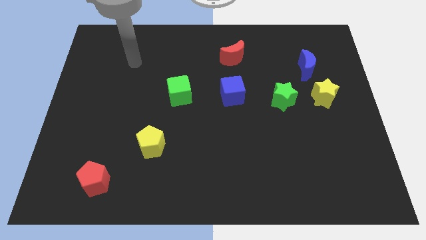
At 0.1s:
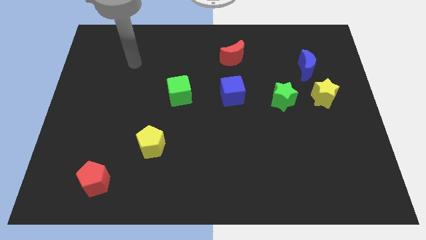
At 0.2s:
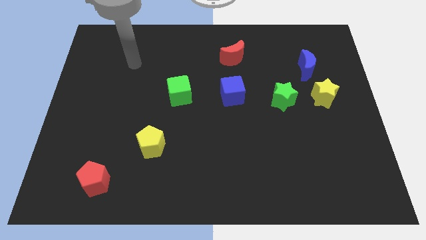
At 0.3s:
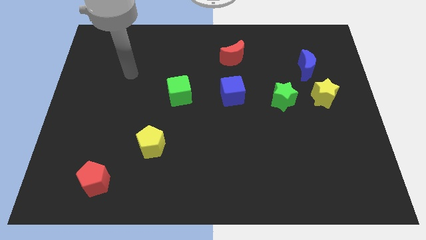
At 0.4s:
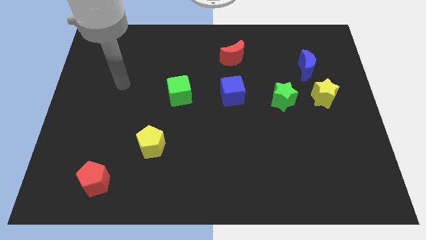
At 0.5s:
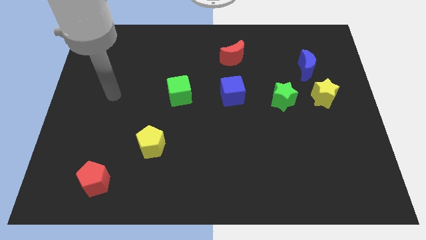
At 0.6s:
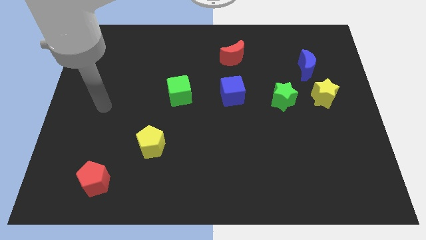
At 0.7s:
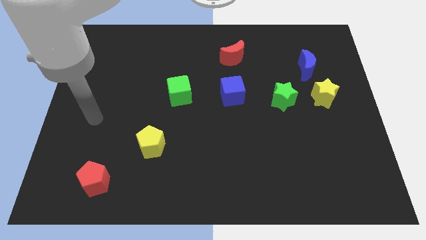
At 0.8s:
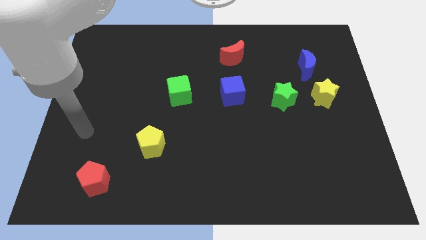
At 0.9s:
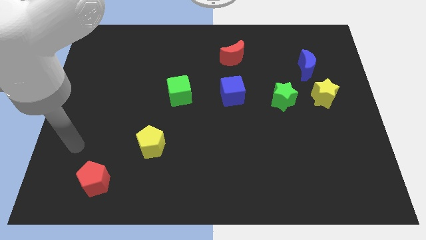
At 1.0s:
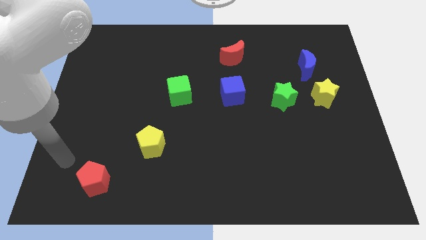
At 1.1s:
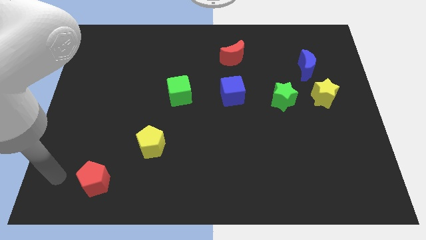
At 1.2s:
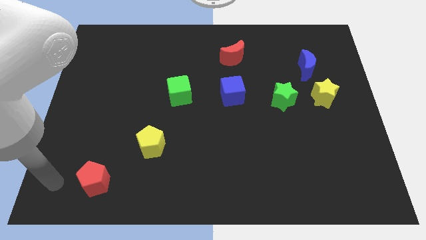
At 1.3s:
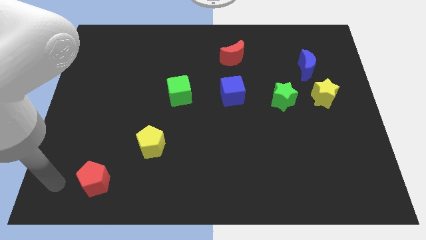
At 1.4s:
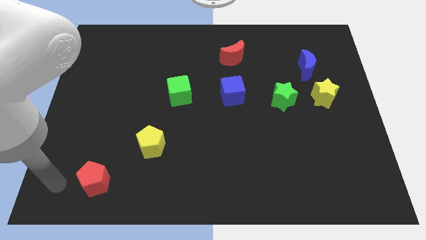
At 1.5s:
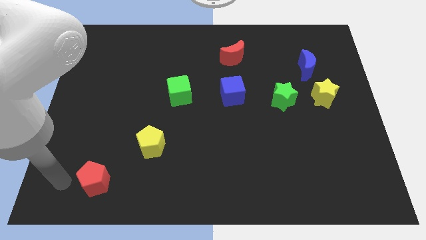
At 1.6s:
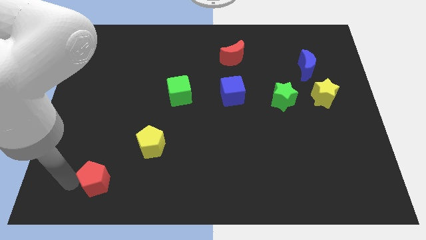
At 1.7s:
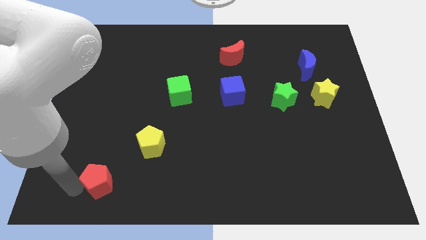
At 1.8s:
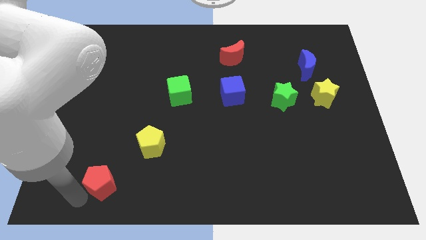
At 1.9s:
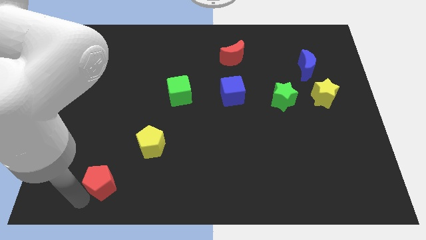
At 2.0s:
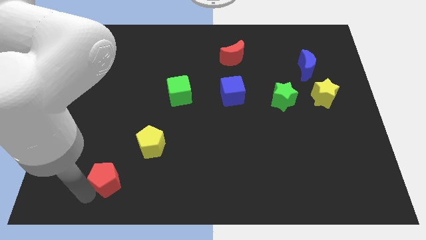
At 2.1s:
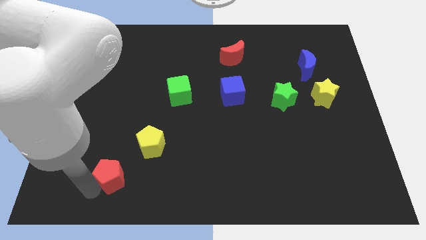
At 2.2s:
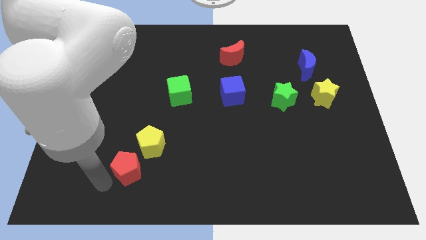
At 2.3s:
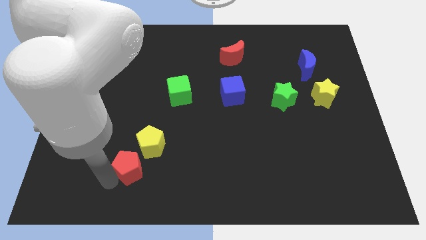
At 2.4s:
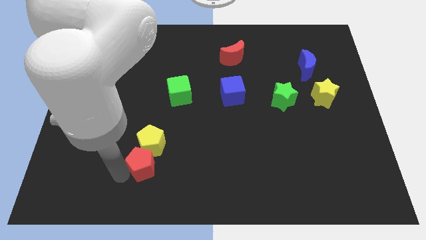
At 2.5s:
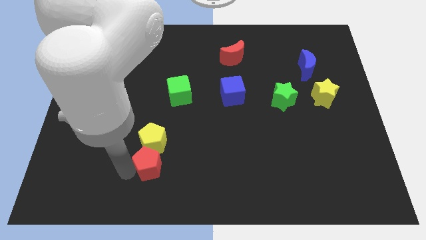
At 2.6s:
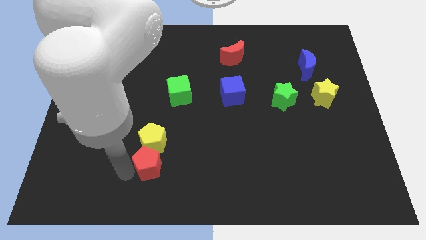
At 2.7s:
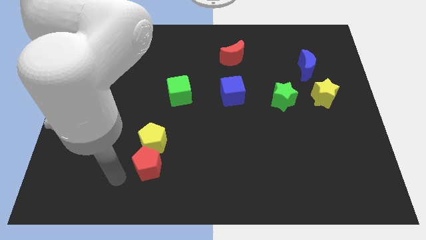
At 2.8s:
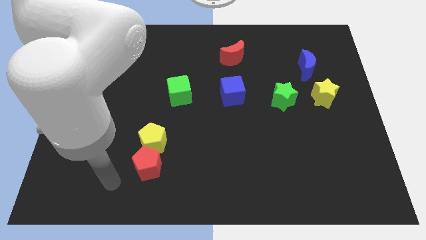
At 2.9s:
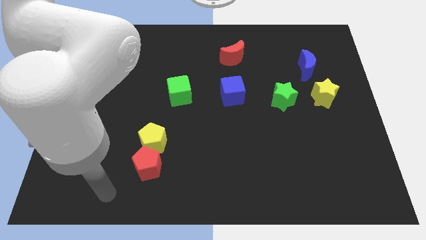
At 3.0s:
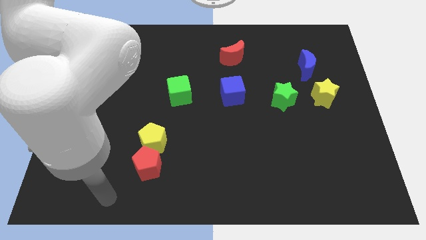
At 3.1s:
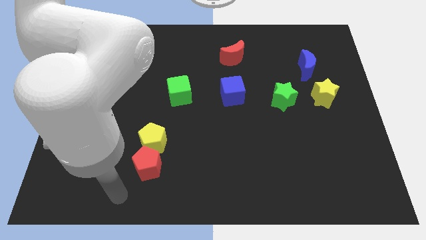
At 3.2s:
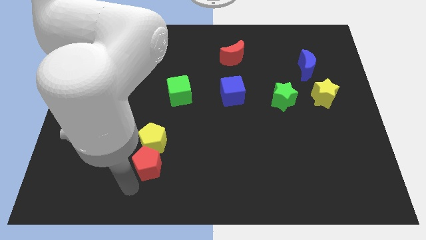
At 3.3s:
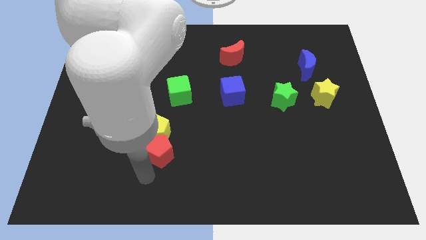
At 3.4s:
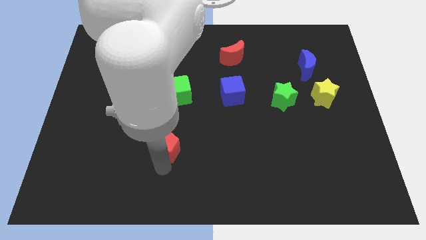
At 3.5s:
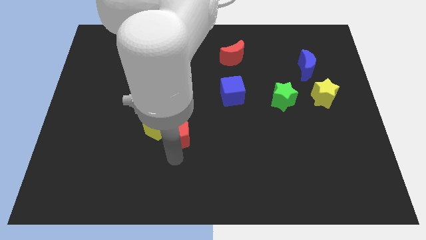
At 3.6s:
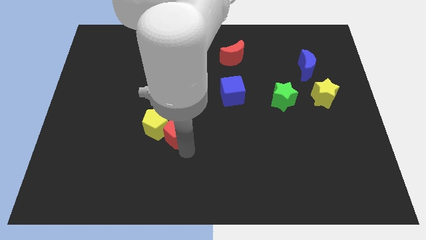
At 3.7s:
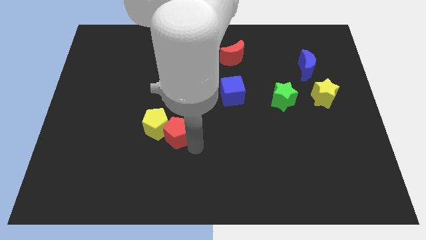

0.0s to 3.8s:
push the red pentagon into the yellow pentagon

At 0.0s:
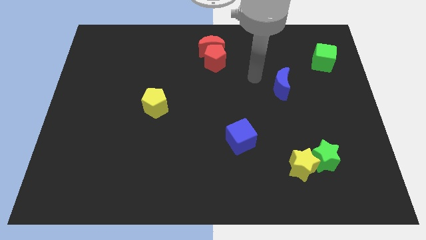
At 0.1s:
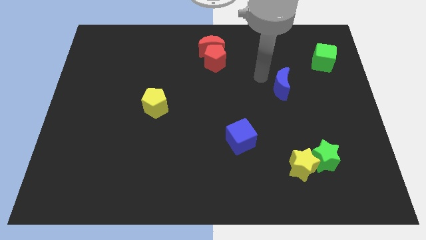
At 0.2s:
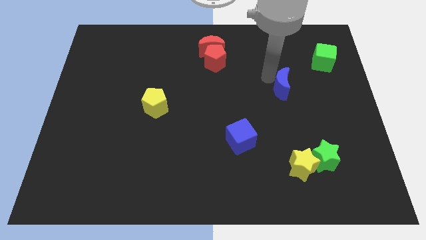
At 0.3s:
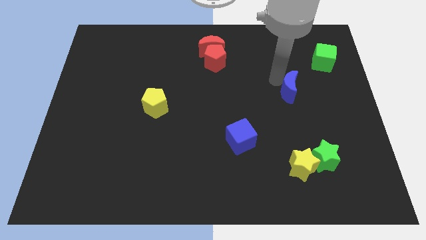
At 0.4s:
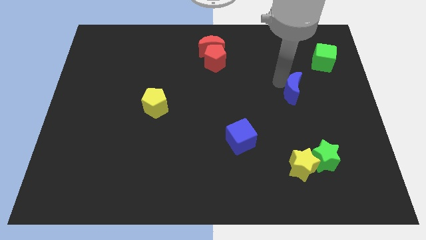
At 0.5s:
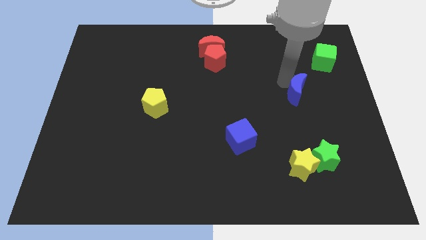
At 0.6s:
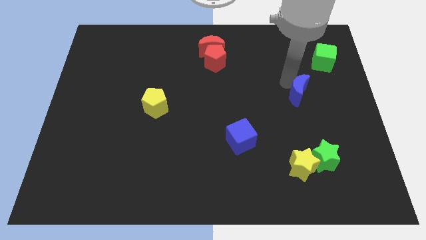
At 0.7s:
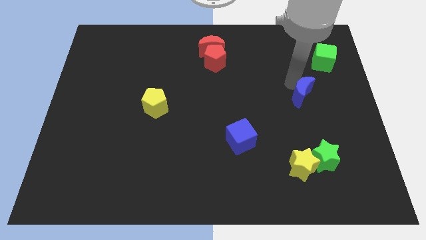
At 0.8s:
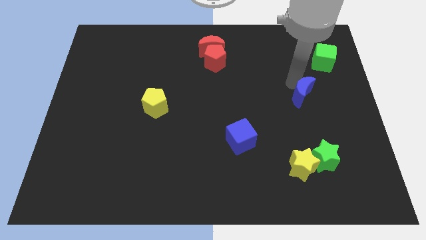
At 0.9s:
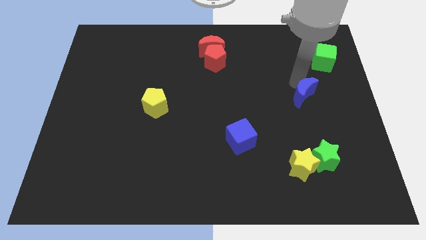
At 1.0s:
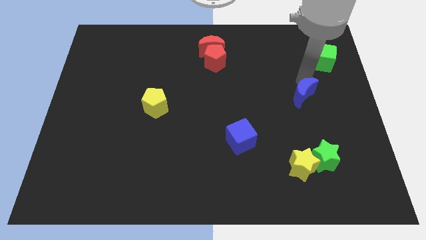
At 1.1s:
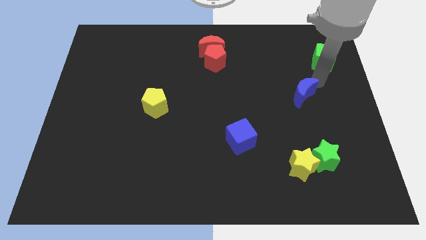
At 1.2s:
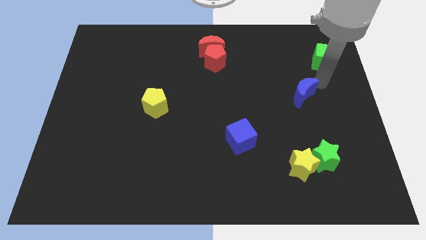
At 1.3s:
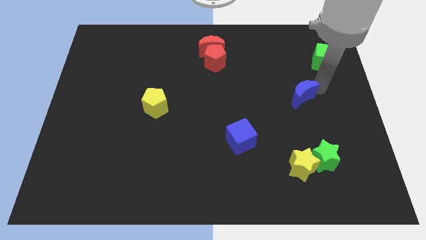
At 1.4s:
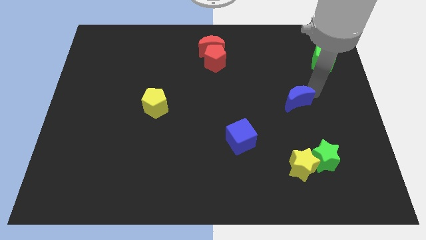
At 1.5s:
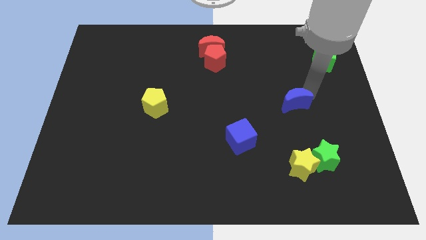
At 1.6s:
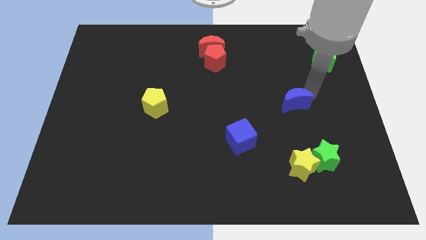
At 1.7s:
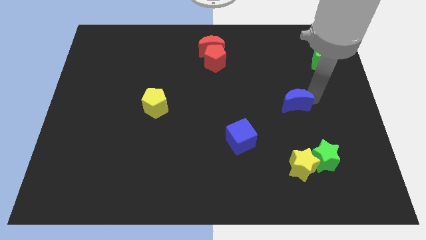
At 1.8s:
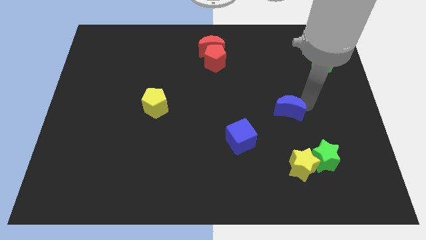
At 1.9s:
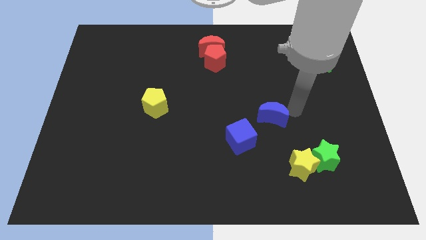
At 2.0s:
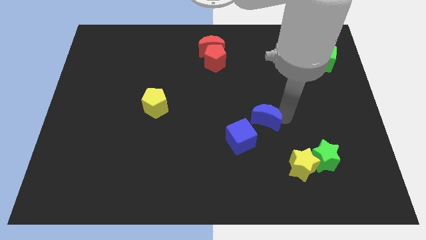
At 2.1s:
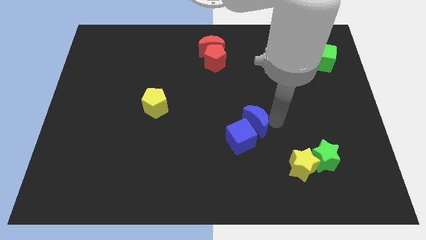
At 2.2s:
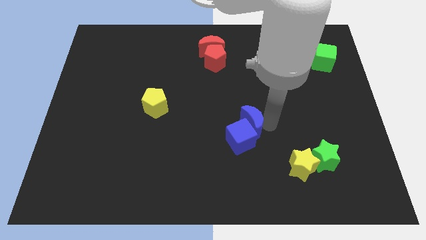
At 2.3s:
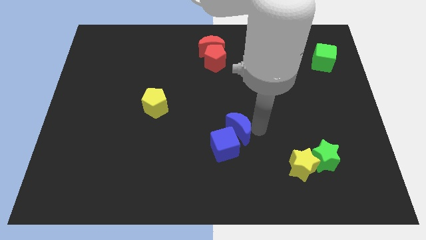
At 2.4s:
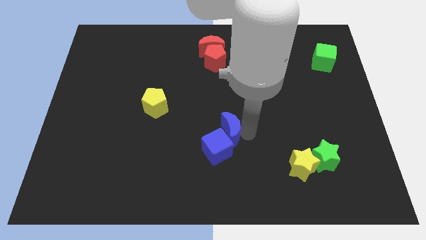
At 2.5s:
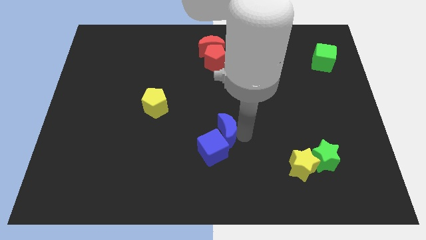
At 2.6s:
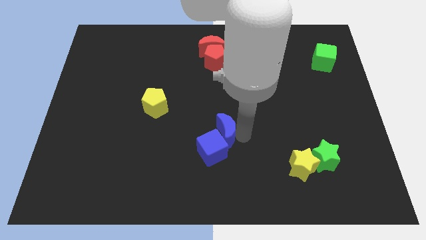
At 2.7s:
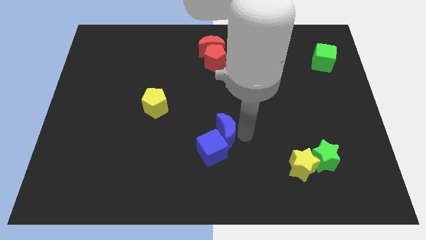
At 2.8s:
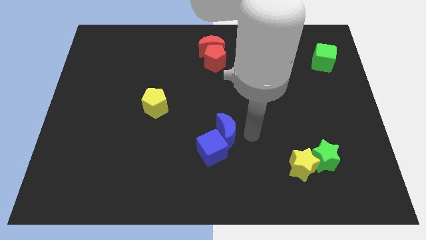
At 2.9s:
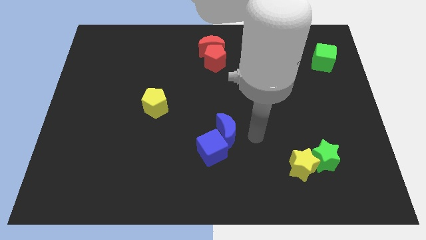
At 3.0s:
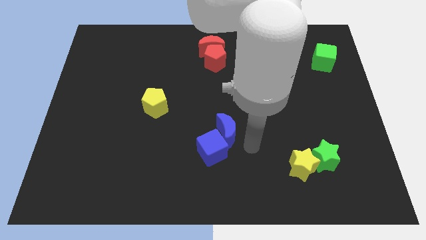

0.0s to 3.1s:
slide blue moon into blue cube

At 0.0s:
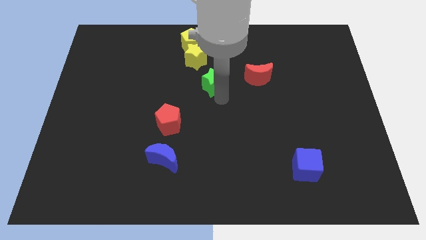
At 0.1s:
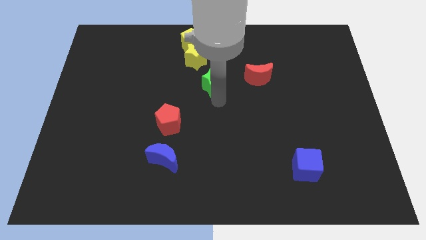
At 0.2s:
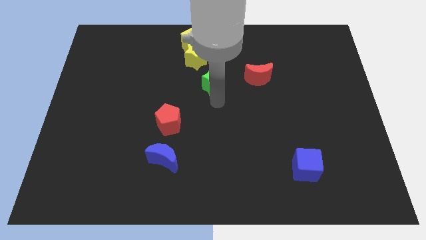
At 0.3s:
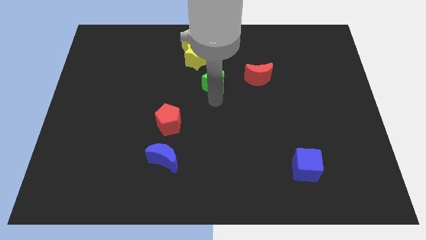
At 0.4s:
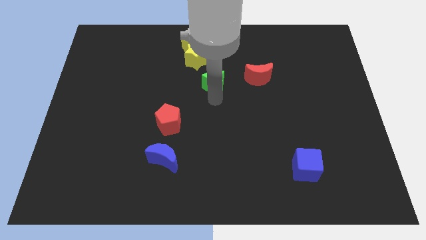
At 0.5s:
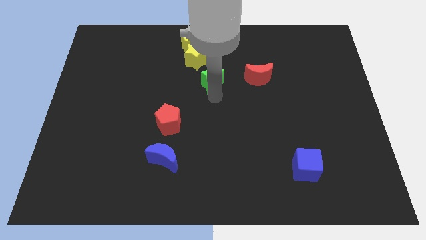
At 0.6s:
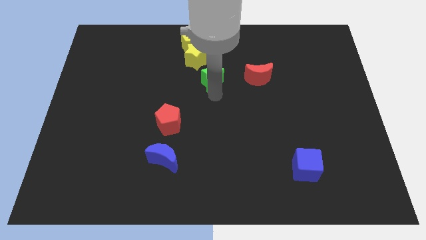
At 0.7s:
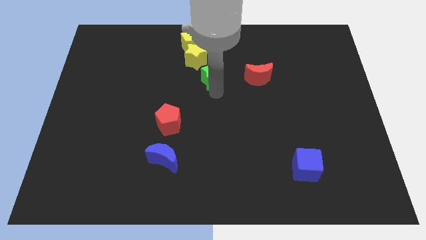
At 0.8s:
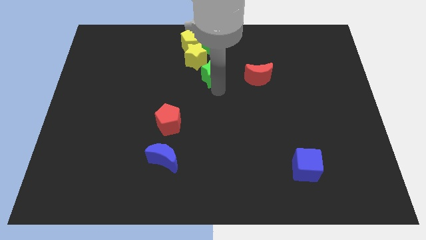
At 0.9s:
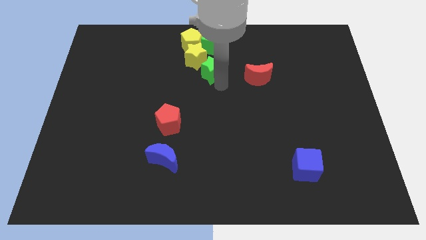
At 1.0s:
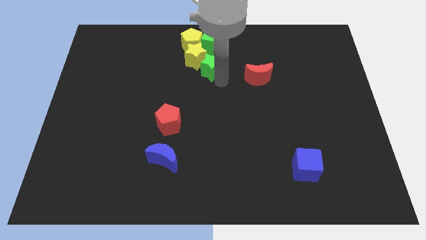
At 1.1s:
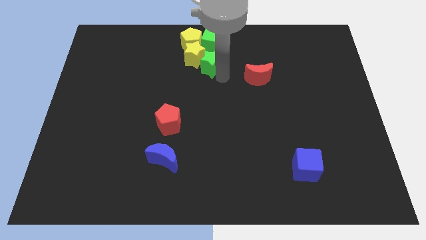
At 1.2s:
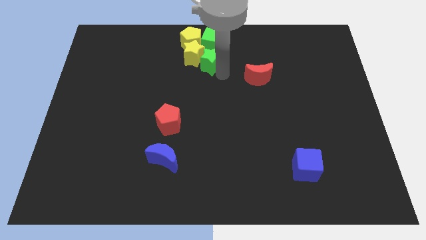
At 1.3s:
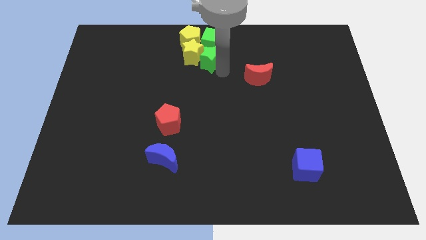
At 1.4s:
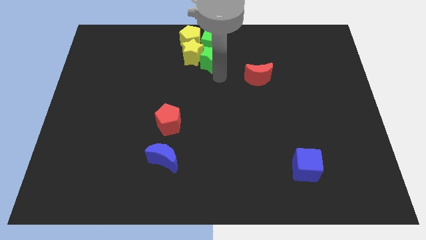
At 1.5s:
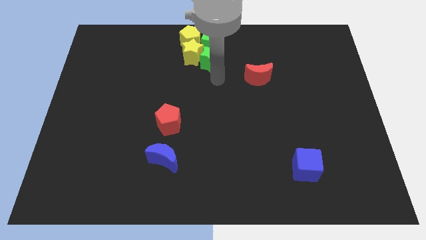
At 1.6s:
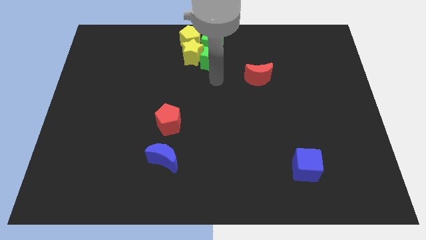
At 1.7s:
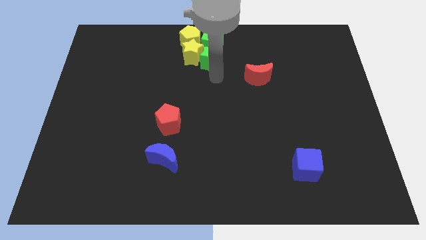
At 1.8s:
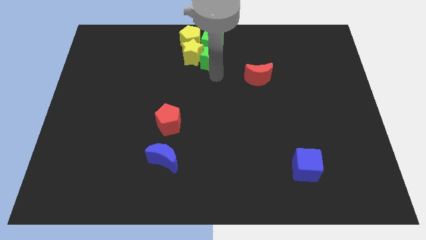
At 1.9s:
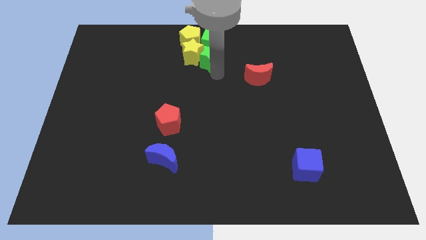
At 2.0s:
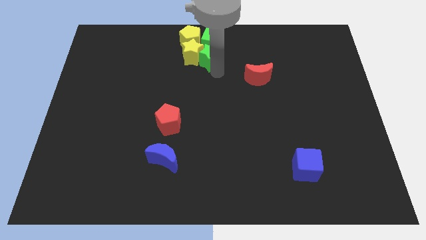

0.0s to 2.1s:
move the green star into the yellow star
